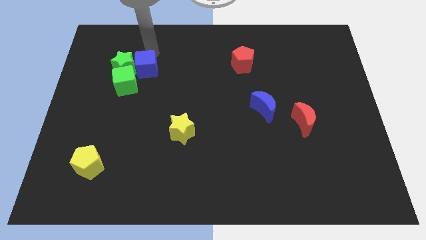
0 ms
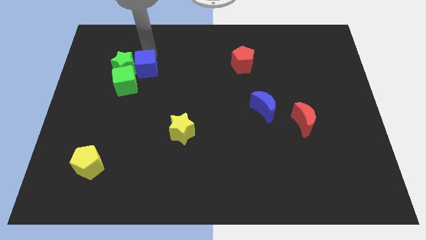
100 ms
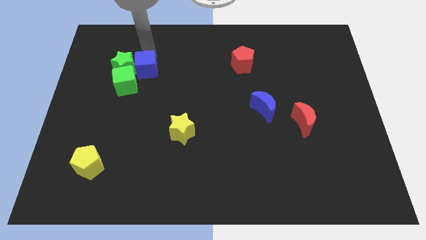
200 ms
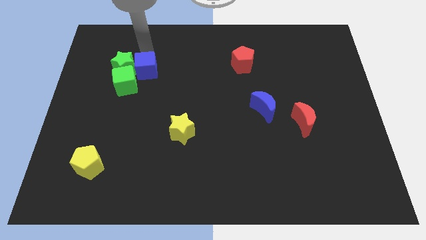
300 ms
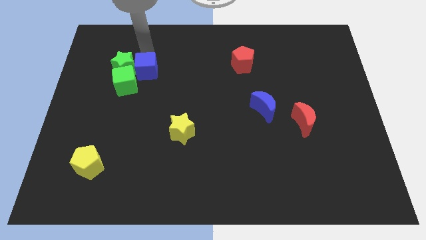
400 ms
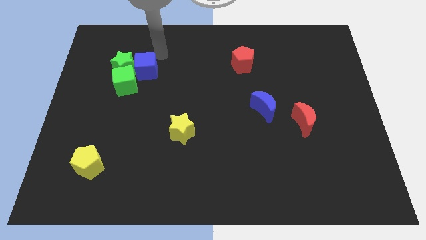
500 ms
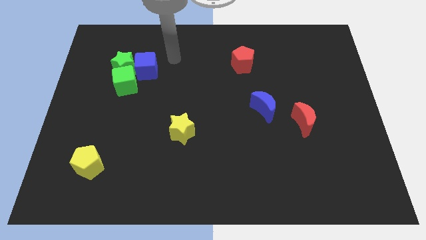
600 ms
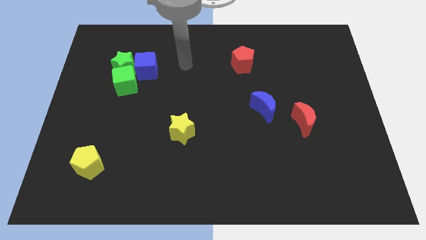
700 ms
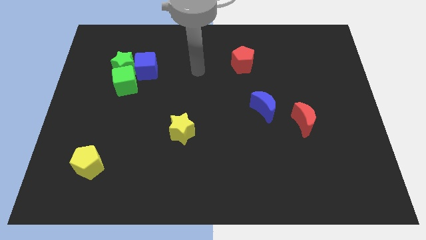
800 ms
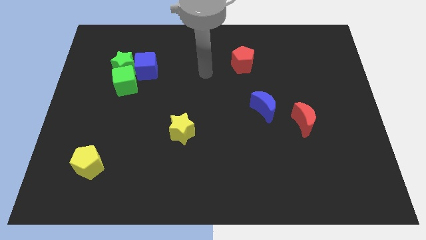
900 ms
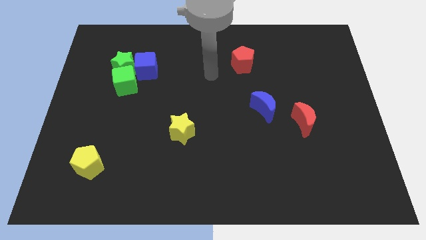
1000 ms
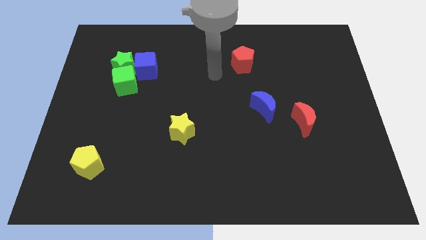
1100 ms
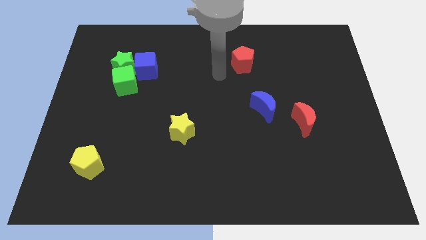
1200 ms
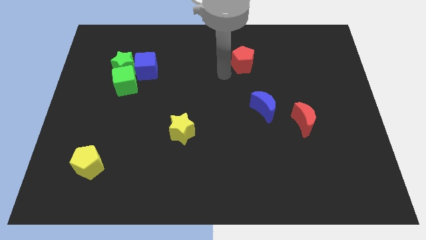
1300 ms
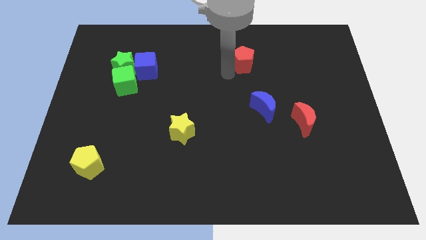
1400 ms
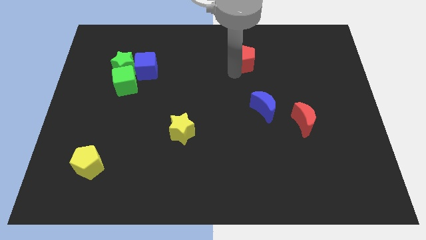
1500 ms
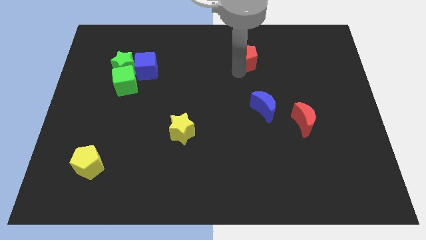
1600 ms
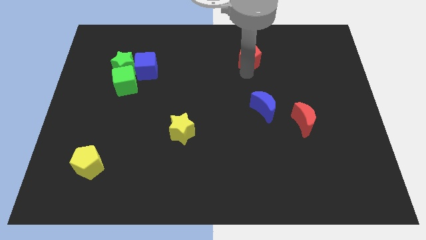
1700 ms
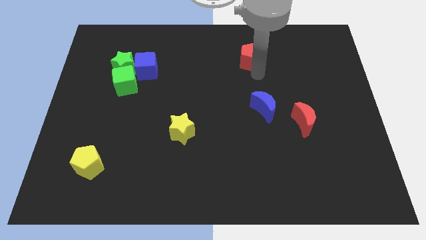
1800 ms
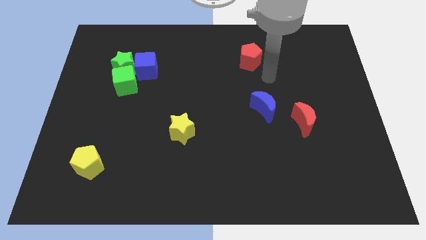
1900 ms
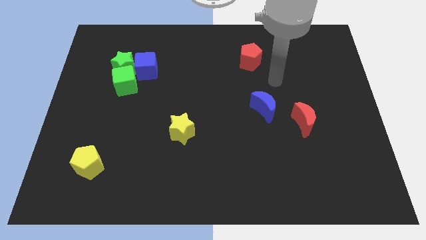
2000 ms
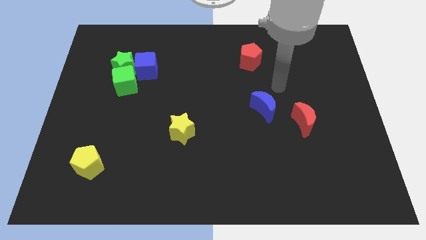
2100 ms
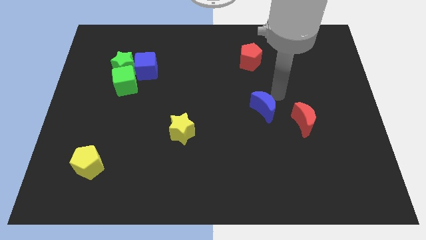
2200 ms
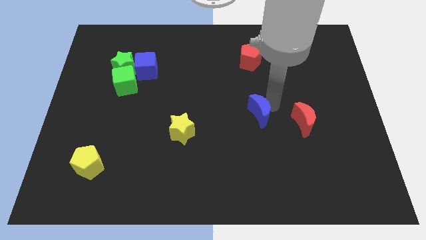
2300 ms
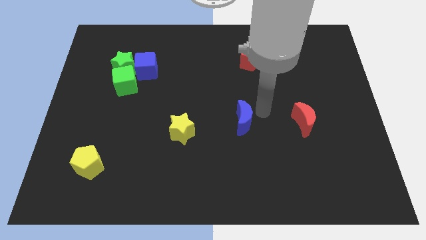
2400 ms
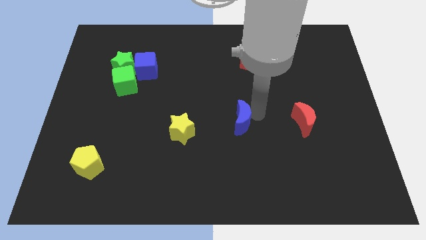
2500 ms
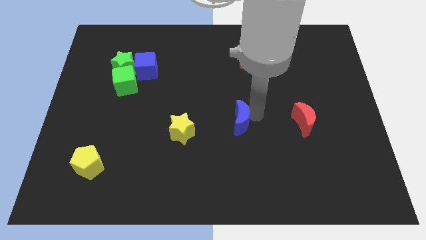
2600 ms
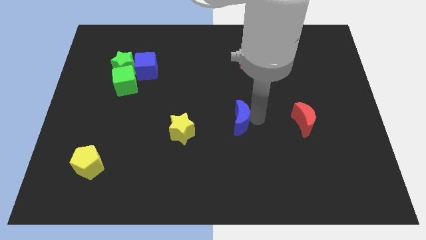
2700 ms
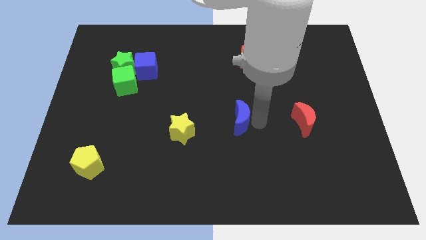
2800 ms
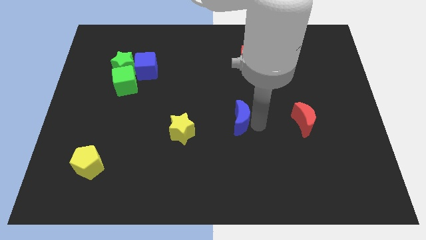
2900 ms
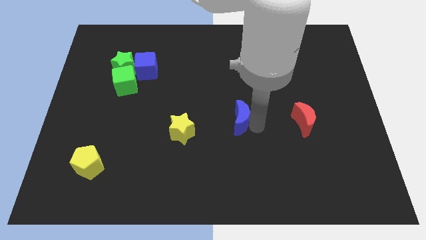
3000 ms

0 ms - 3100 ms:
move the arm around the blue moon

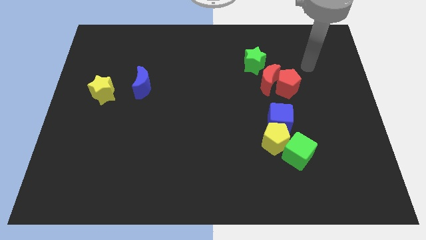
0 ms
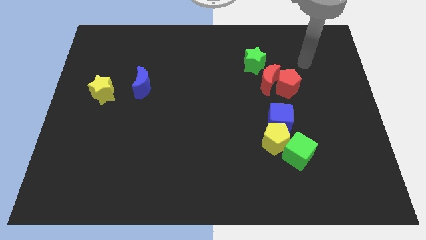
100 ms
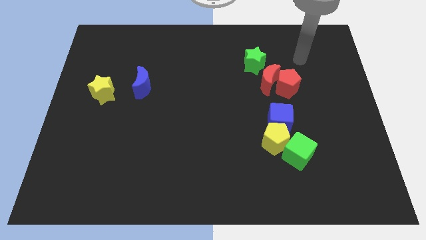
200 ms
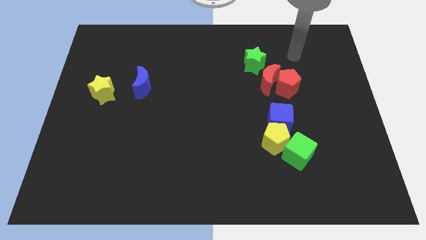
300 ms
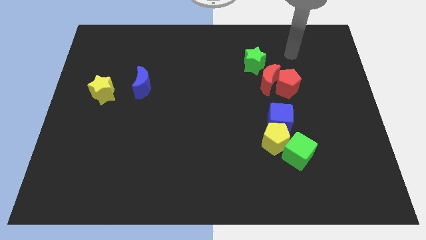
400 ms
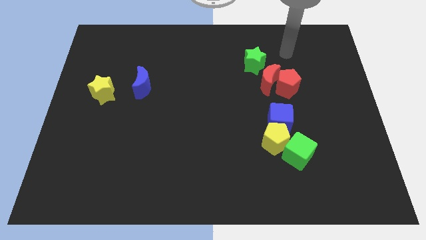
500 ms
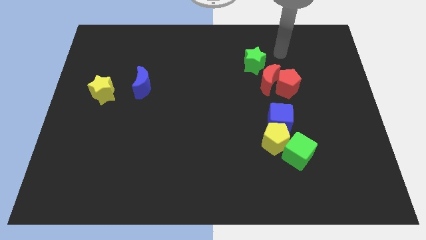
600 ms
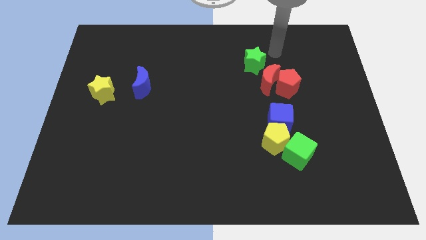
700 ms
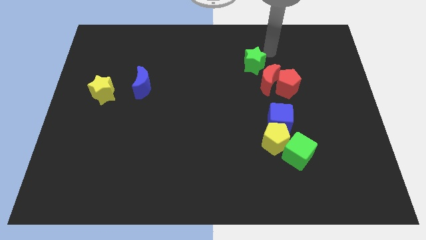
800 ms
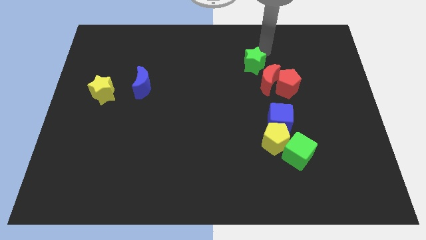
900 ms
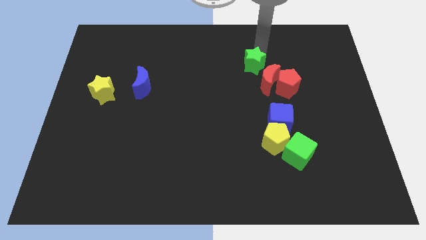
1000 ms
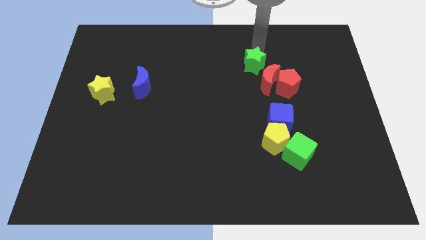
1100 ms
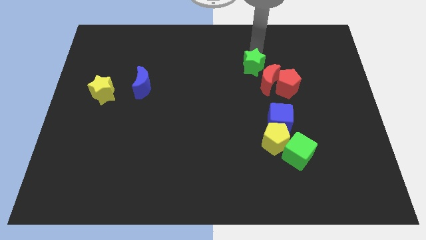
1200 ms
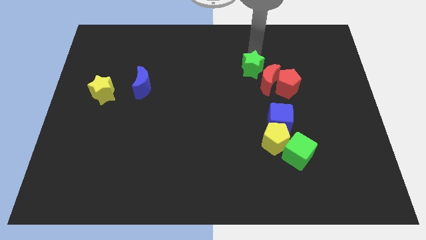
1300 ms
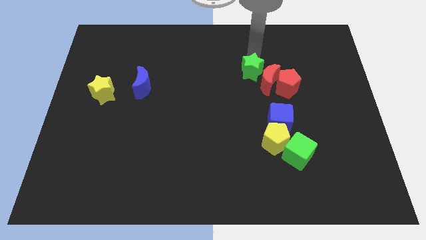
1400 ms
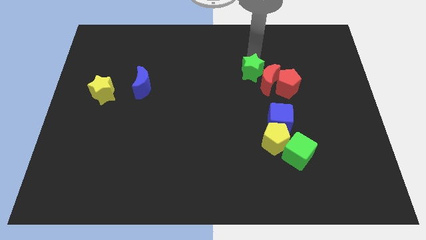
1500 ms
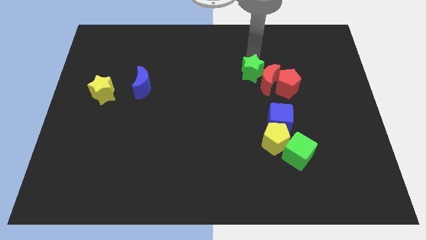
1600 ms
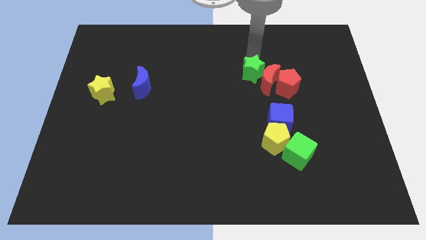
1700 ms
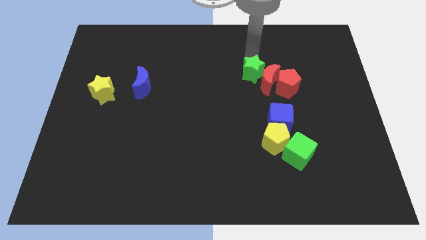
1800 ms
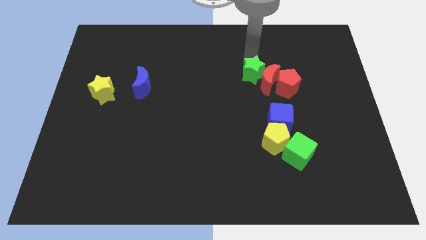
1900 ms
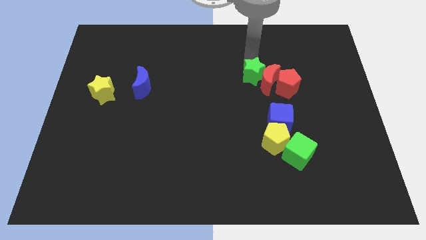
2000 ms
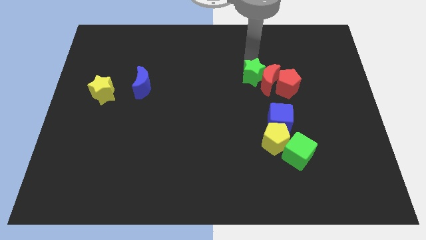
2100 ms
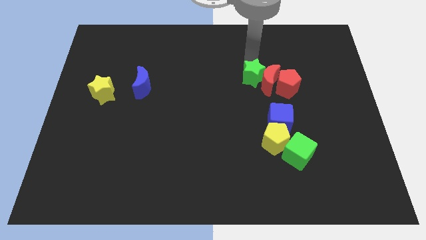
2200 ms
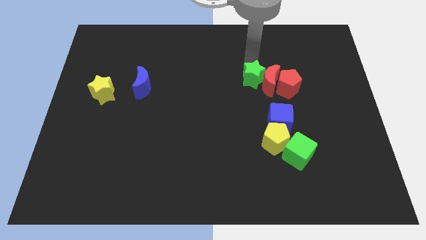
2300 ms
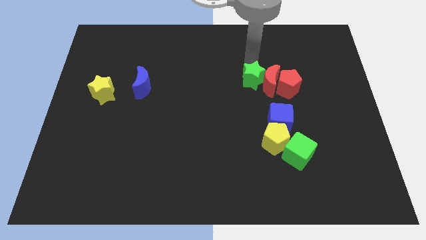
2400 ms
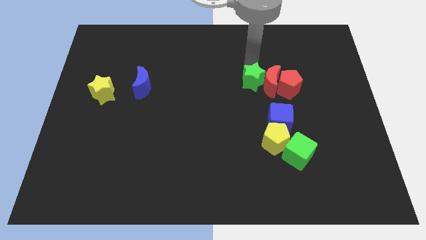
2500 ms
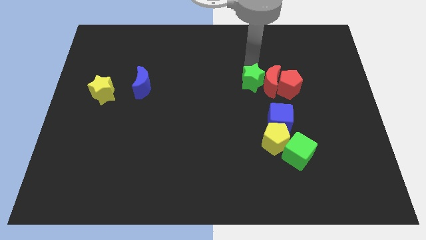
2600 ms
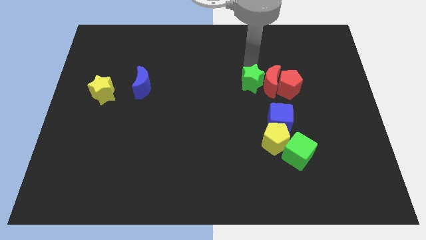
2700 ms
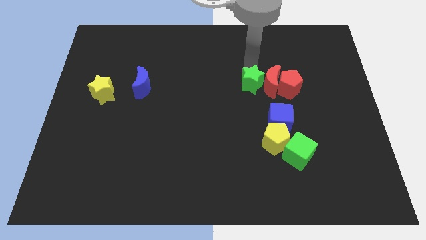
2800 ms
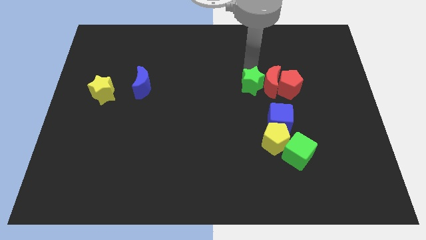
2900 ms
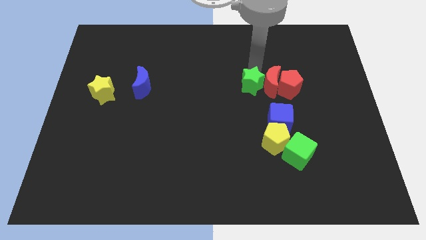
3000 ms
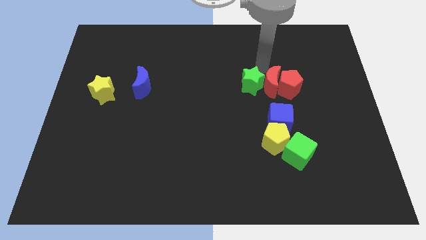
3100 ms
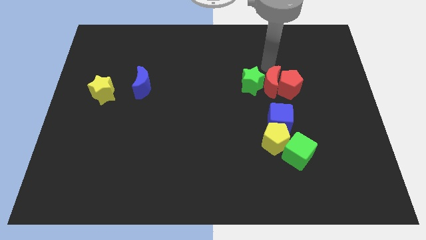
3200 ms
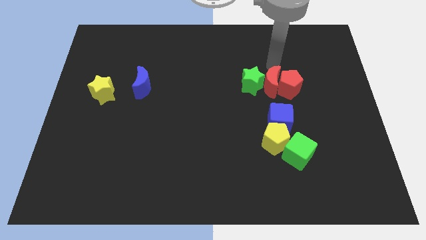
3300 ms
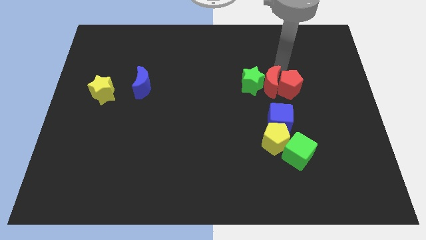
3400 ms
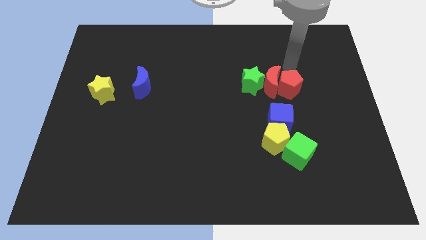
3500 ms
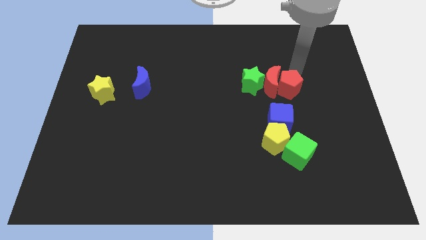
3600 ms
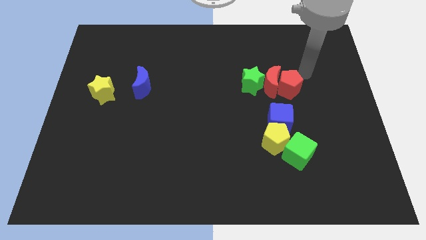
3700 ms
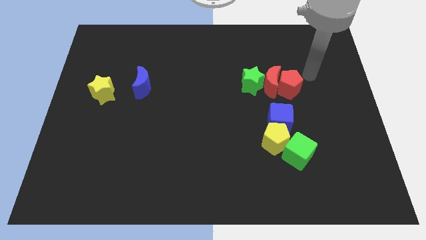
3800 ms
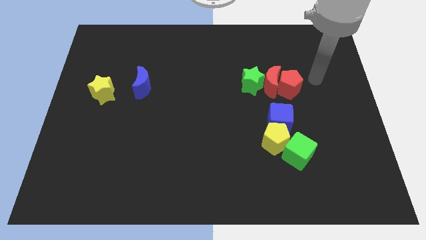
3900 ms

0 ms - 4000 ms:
move green star to the to the left of red crescent

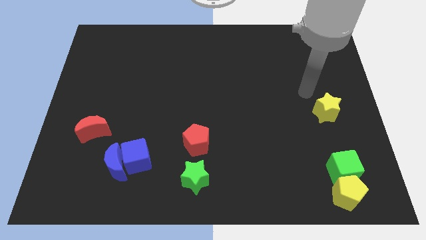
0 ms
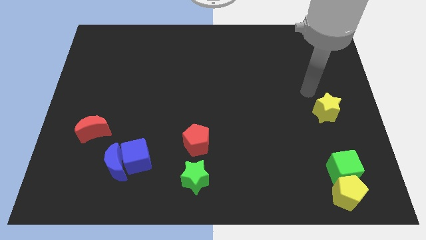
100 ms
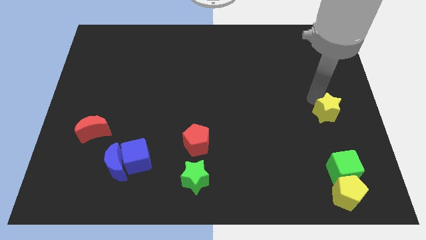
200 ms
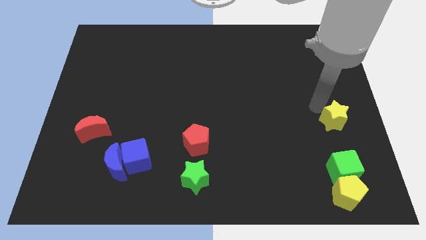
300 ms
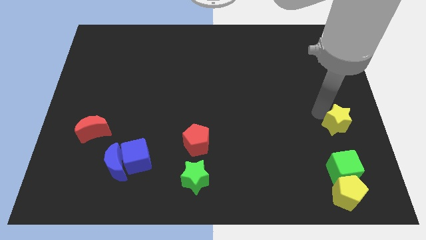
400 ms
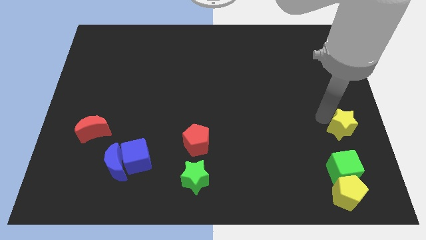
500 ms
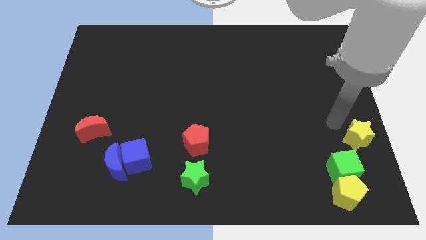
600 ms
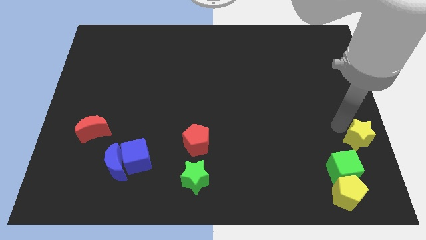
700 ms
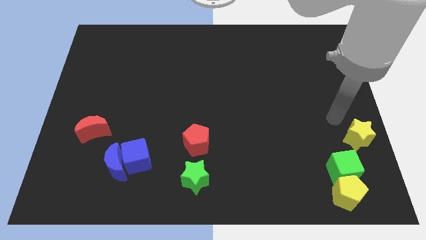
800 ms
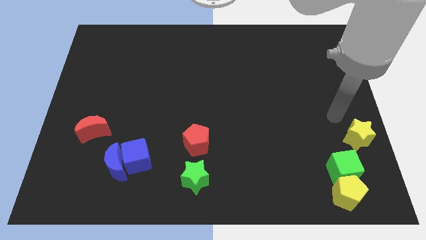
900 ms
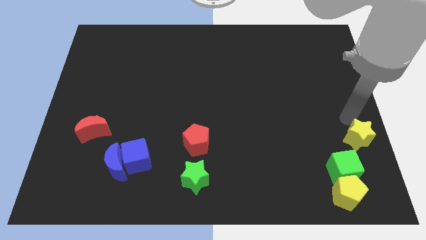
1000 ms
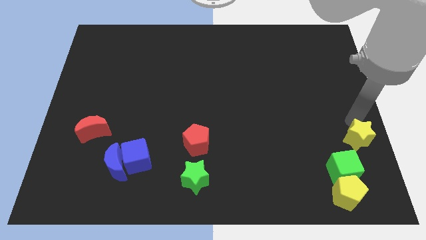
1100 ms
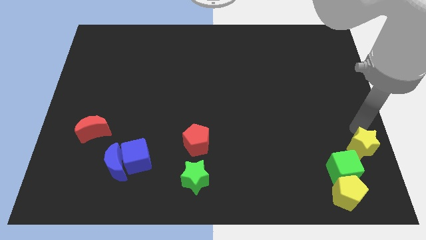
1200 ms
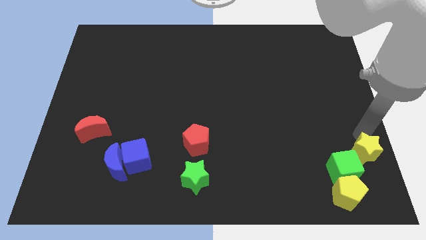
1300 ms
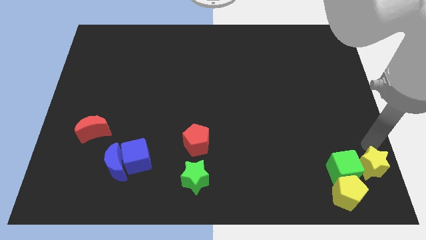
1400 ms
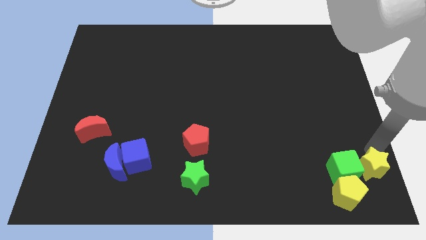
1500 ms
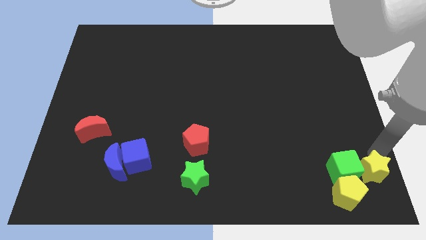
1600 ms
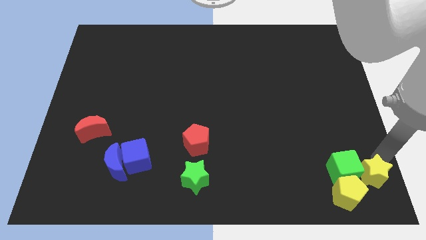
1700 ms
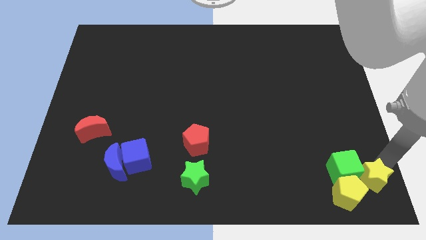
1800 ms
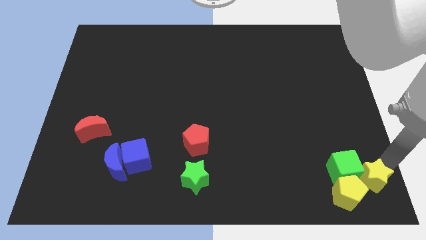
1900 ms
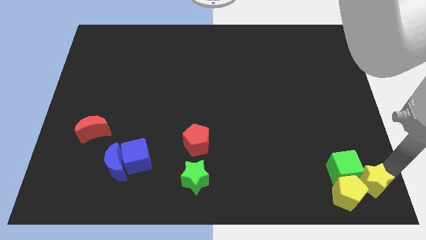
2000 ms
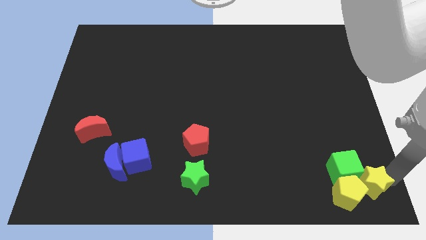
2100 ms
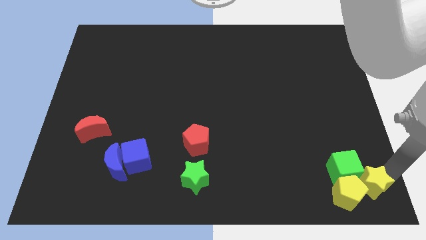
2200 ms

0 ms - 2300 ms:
move the yellow star diagonal into the yellow pentagon
